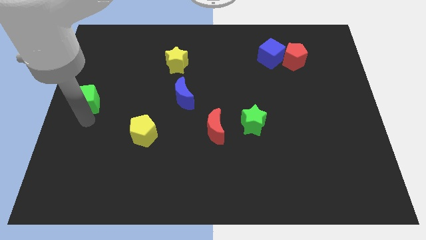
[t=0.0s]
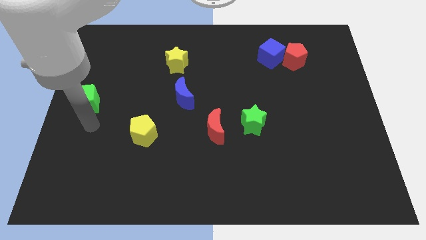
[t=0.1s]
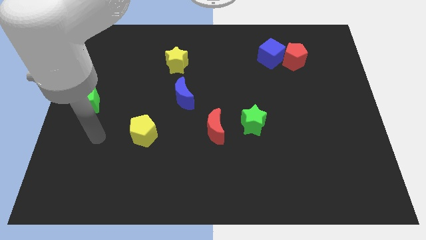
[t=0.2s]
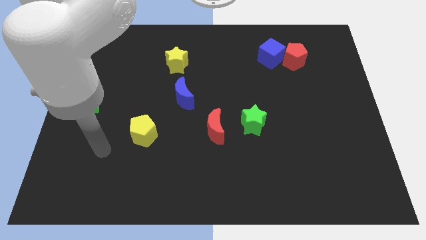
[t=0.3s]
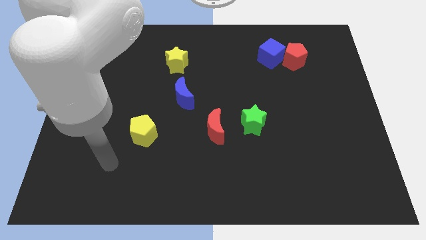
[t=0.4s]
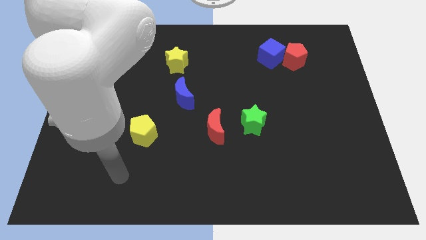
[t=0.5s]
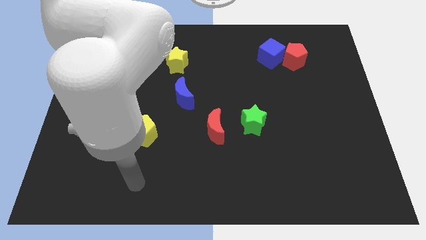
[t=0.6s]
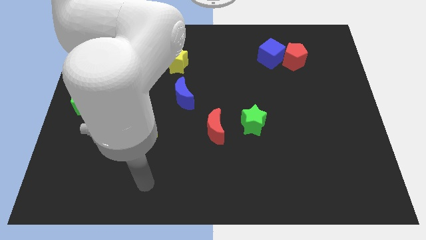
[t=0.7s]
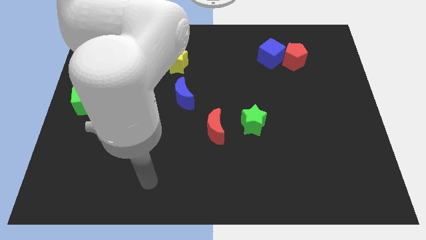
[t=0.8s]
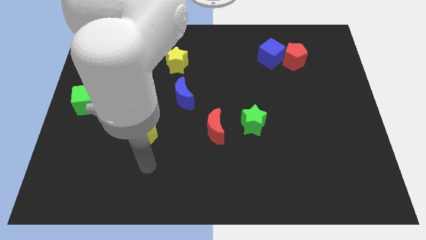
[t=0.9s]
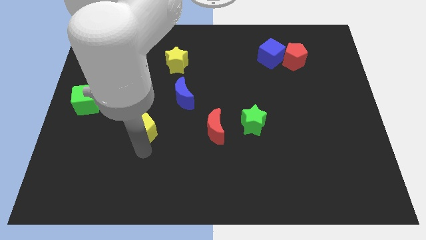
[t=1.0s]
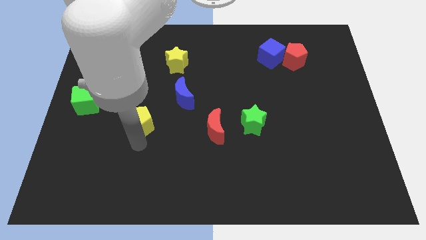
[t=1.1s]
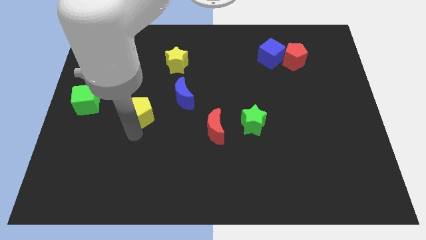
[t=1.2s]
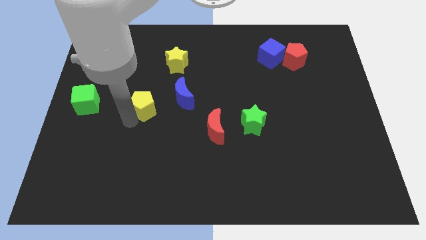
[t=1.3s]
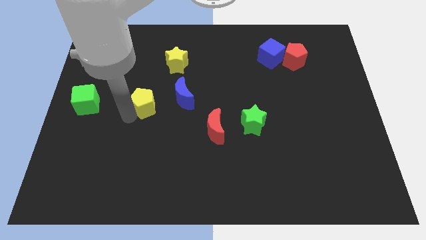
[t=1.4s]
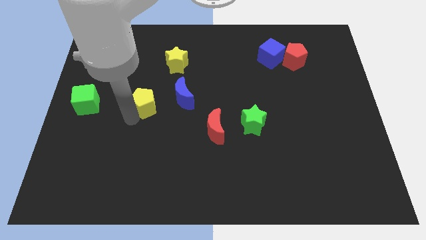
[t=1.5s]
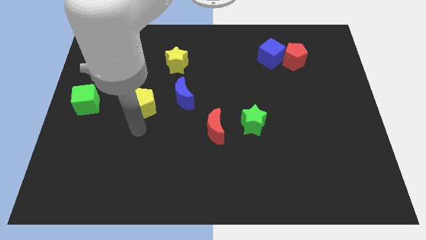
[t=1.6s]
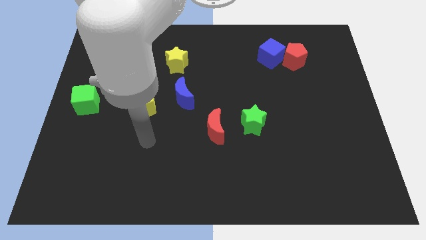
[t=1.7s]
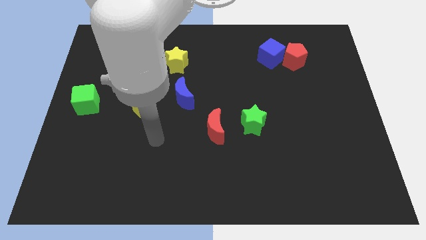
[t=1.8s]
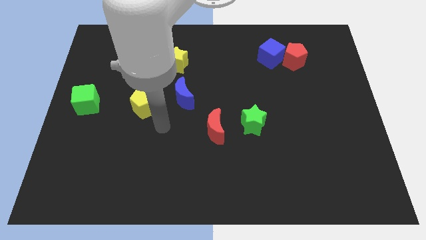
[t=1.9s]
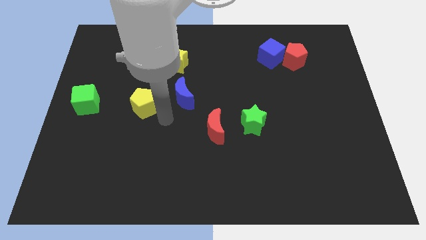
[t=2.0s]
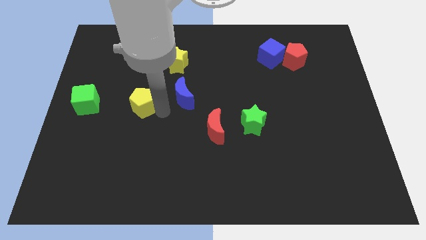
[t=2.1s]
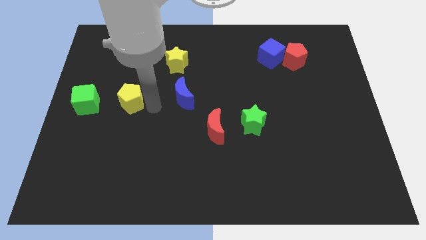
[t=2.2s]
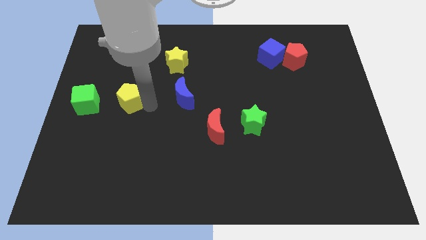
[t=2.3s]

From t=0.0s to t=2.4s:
move your arm away from the green cube

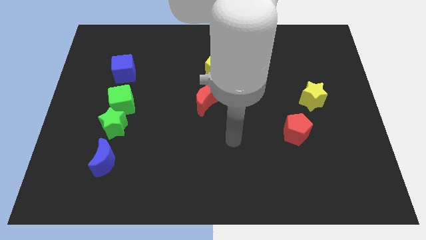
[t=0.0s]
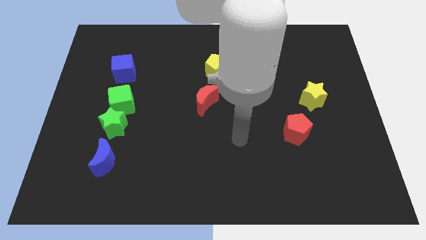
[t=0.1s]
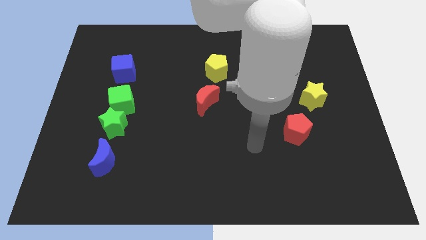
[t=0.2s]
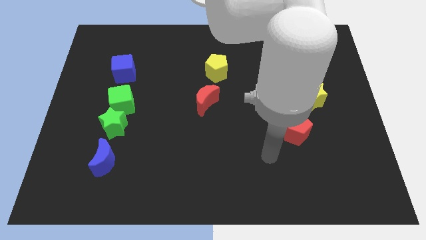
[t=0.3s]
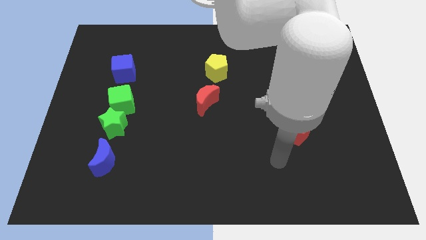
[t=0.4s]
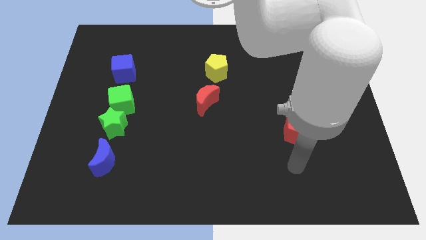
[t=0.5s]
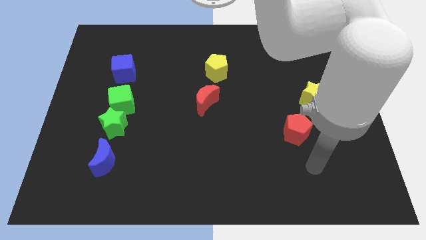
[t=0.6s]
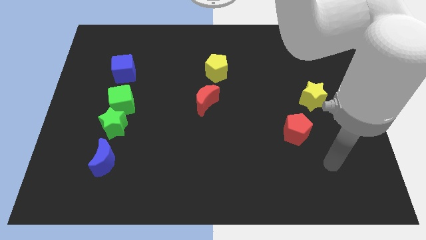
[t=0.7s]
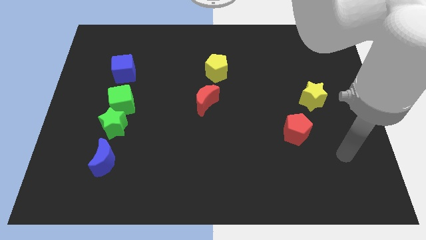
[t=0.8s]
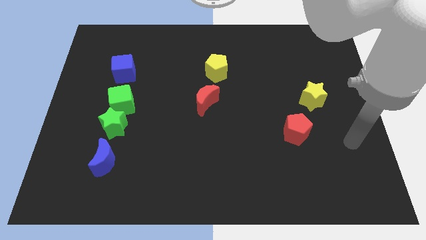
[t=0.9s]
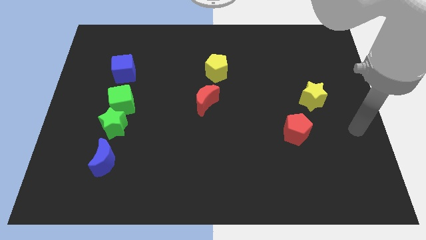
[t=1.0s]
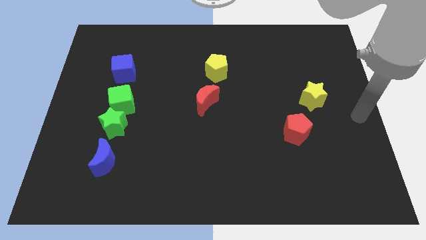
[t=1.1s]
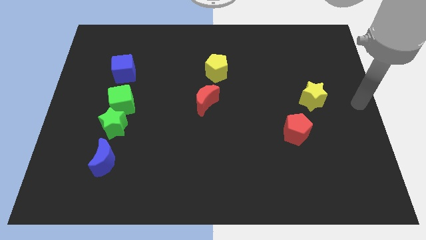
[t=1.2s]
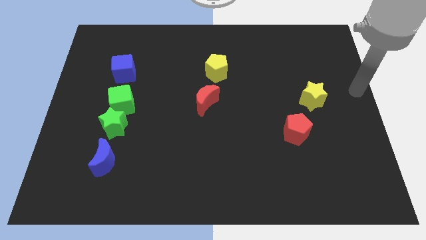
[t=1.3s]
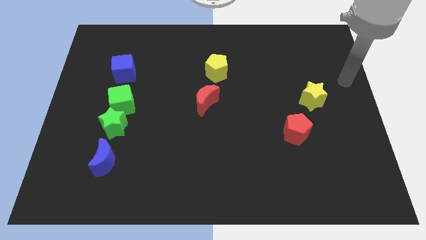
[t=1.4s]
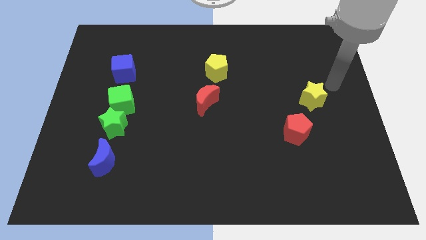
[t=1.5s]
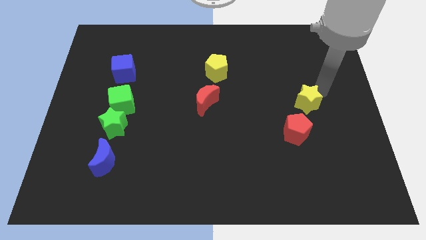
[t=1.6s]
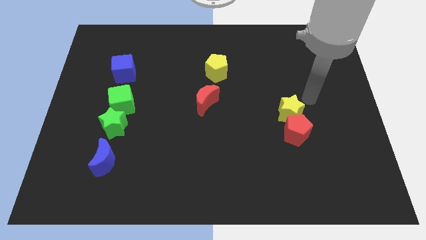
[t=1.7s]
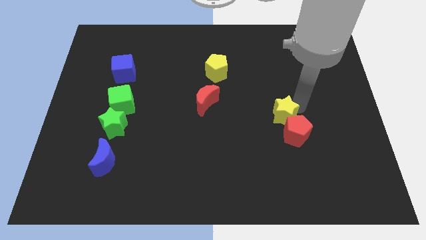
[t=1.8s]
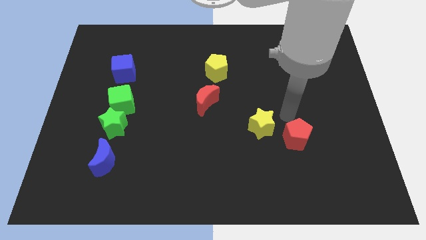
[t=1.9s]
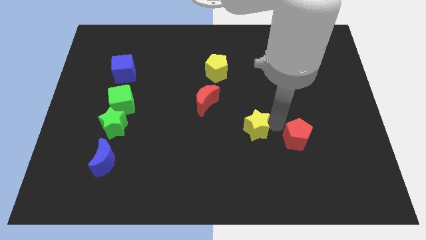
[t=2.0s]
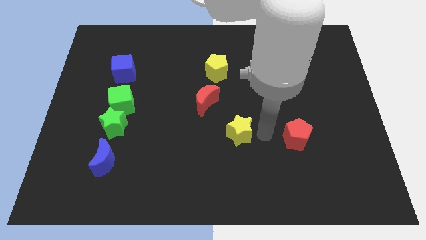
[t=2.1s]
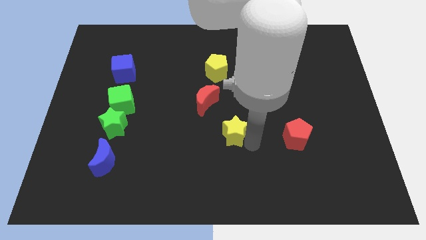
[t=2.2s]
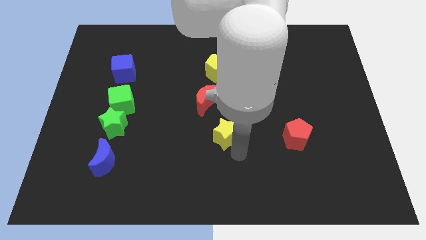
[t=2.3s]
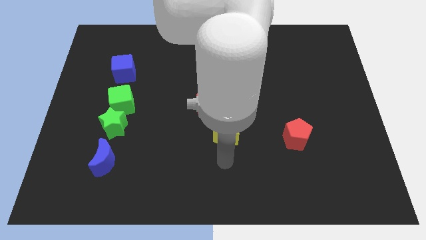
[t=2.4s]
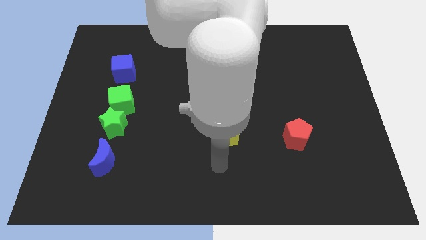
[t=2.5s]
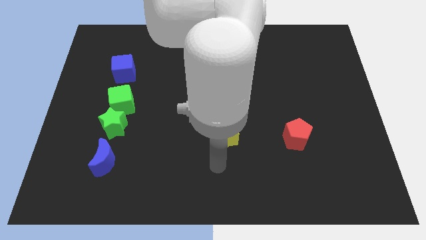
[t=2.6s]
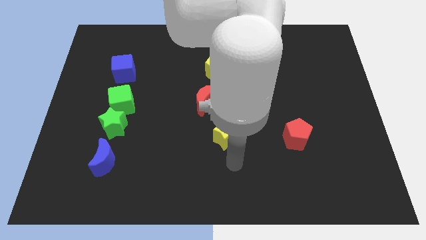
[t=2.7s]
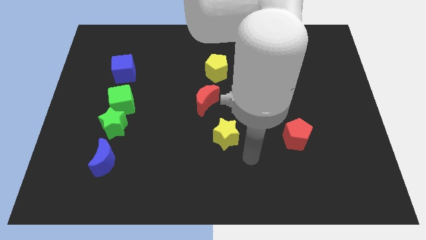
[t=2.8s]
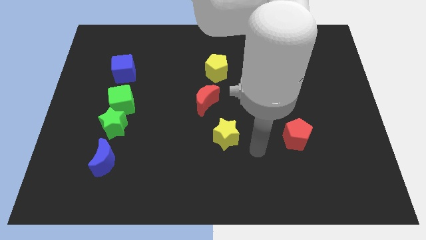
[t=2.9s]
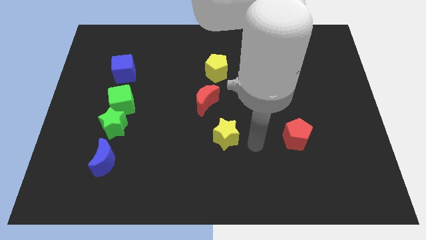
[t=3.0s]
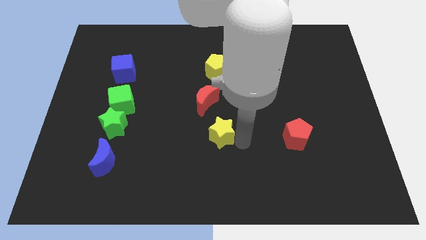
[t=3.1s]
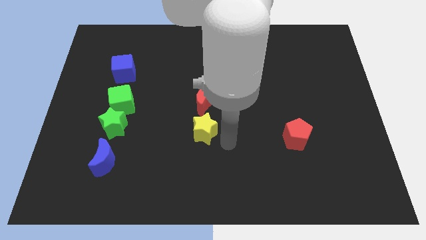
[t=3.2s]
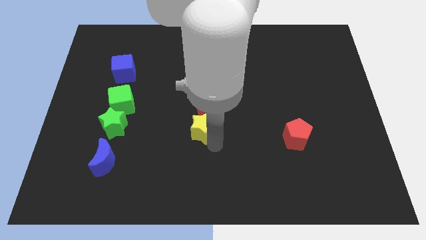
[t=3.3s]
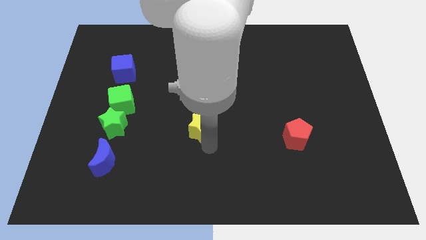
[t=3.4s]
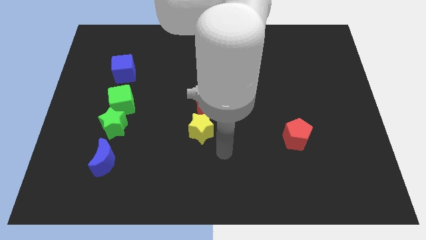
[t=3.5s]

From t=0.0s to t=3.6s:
place the yellow star to the bottom of the red crescent

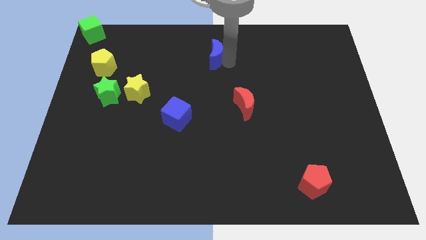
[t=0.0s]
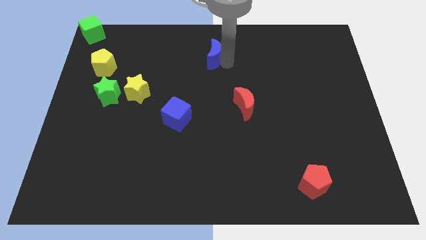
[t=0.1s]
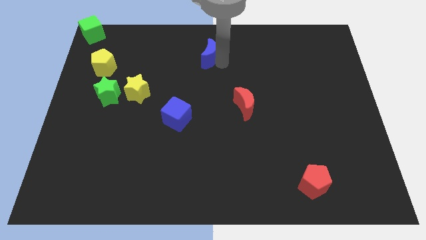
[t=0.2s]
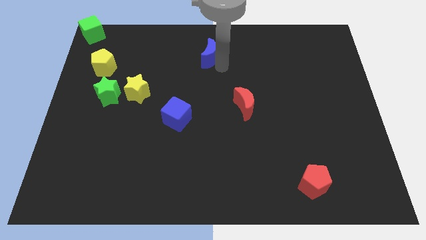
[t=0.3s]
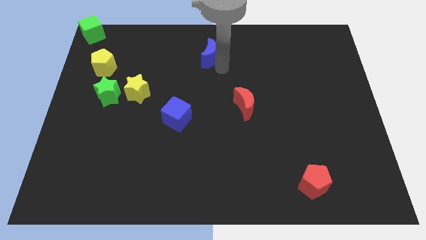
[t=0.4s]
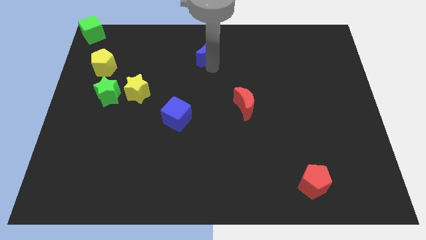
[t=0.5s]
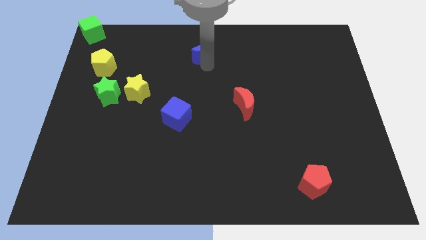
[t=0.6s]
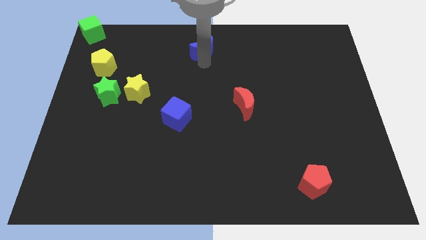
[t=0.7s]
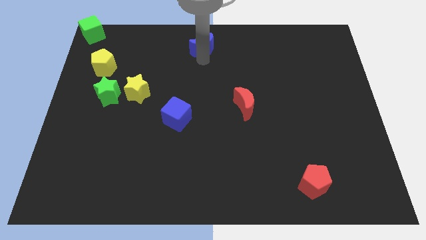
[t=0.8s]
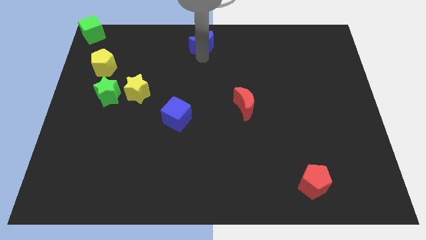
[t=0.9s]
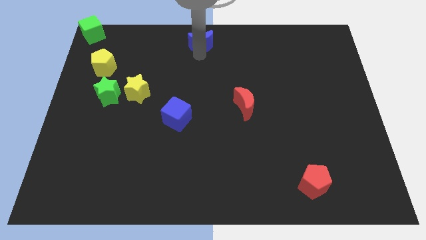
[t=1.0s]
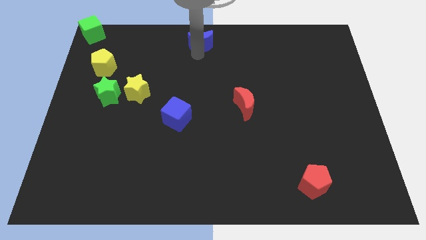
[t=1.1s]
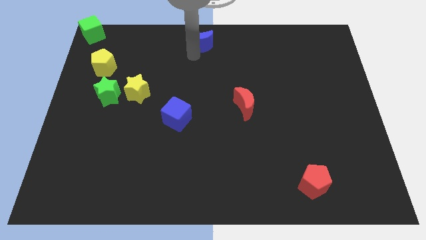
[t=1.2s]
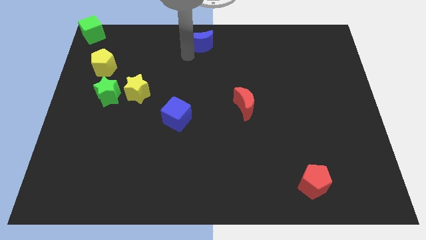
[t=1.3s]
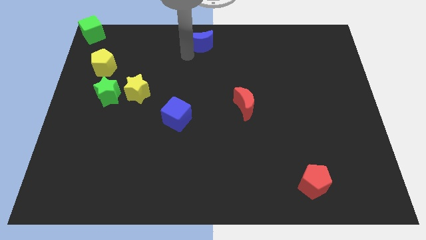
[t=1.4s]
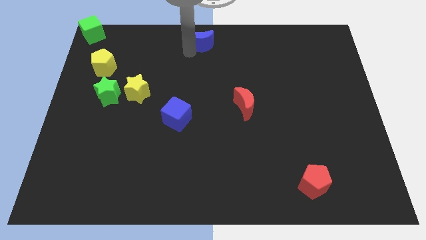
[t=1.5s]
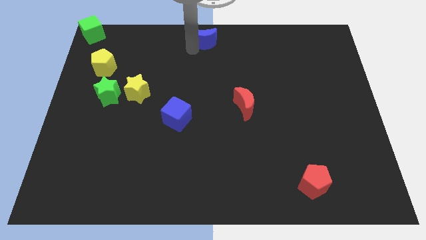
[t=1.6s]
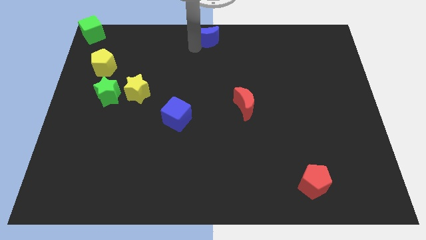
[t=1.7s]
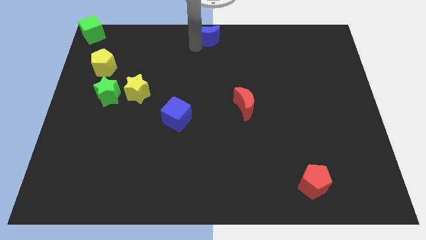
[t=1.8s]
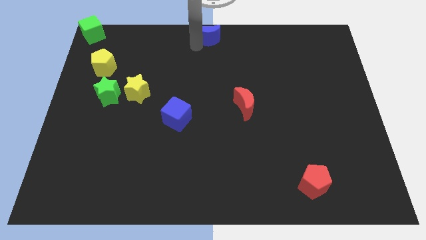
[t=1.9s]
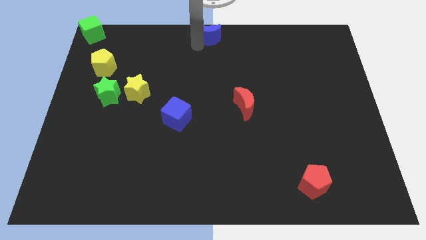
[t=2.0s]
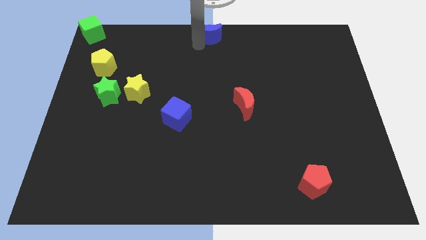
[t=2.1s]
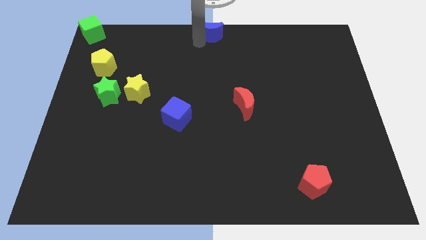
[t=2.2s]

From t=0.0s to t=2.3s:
push the blue moon to the top centre of the board

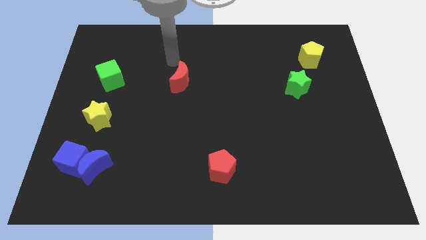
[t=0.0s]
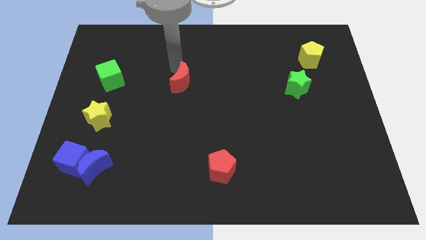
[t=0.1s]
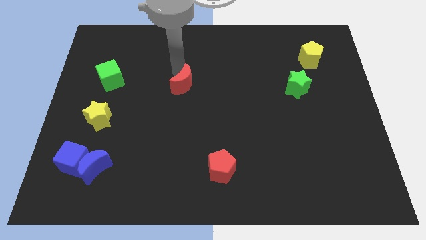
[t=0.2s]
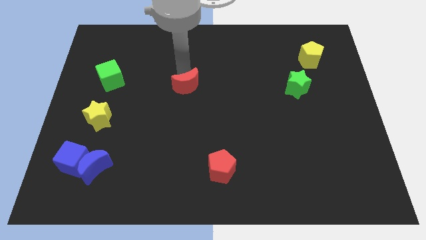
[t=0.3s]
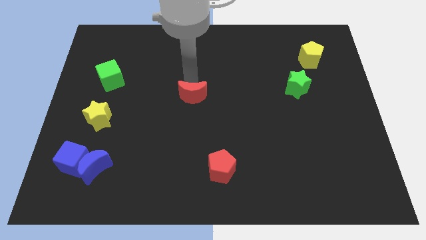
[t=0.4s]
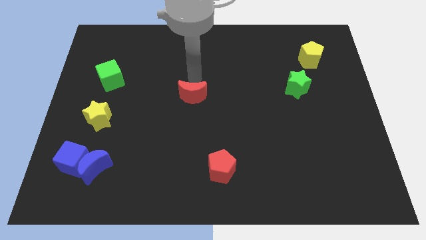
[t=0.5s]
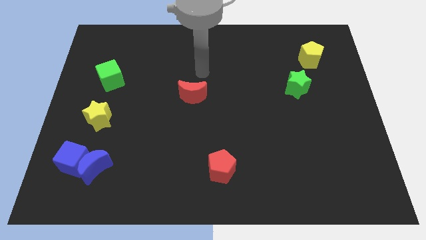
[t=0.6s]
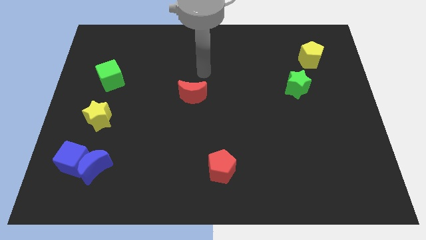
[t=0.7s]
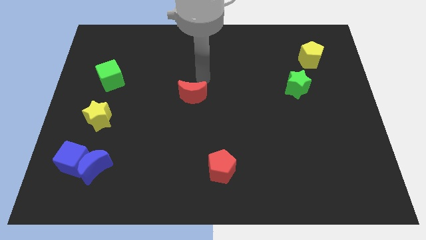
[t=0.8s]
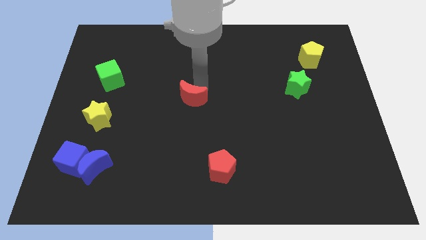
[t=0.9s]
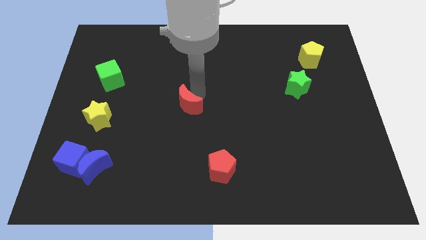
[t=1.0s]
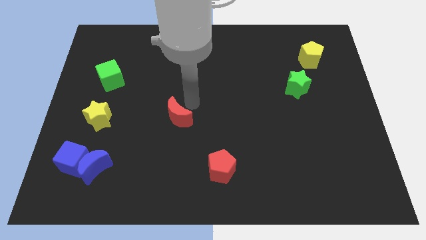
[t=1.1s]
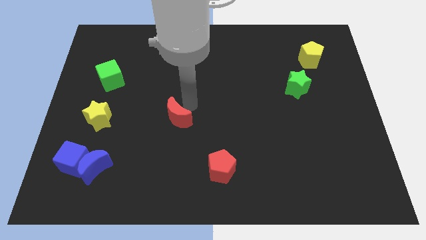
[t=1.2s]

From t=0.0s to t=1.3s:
put the red moon horizontally to the right side of the yellow star
